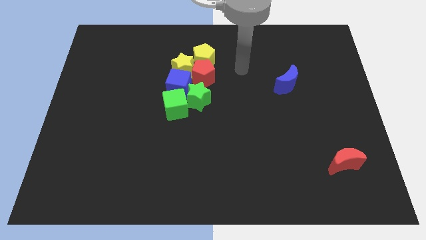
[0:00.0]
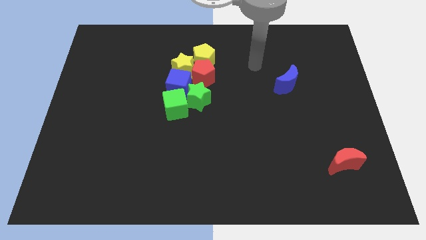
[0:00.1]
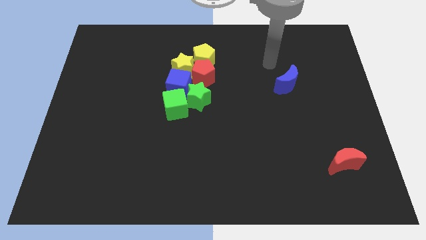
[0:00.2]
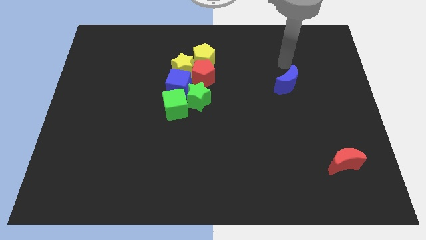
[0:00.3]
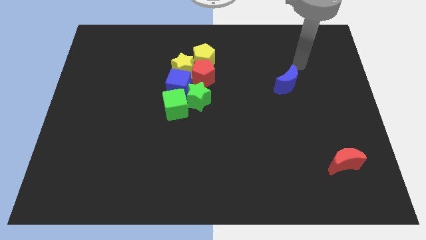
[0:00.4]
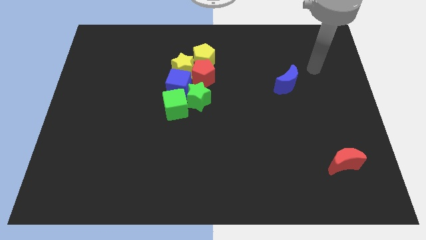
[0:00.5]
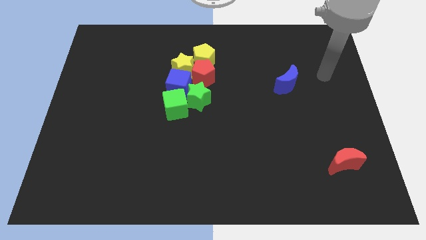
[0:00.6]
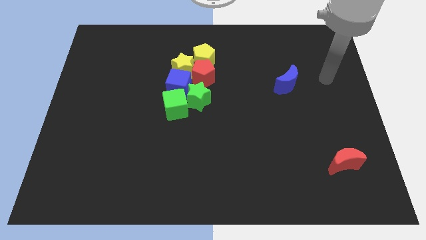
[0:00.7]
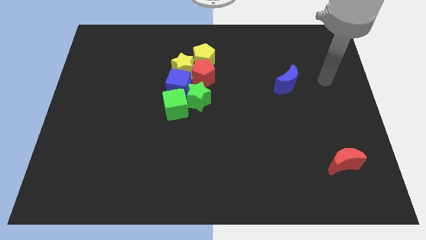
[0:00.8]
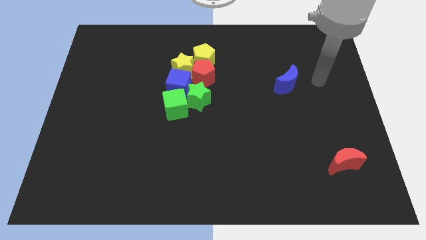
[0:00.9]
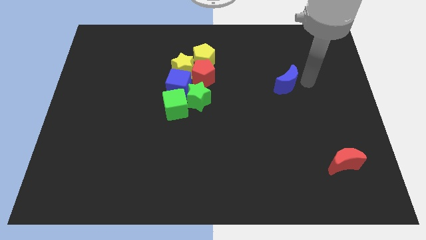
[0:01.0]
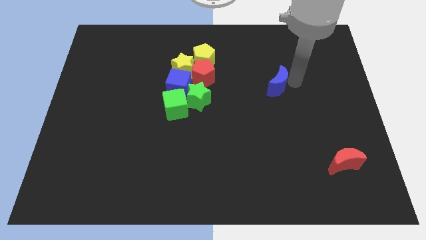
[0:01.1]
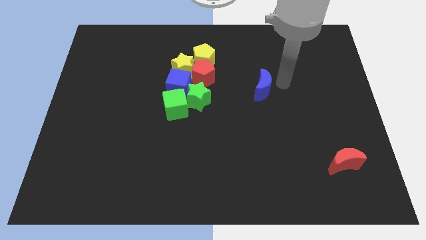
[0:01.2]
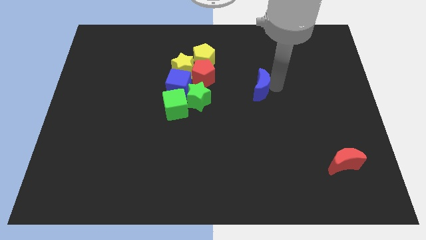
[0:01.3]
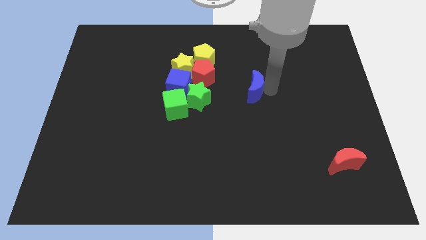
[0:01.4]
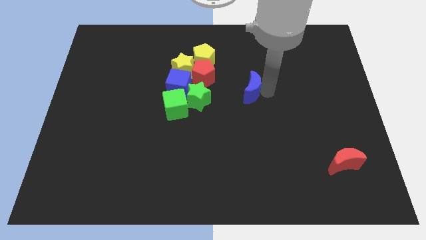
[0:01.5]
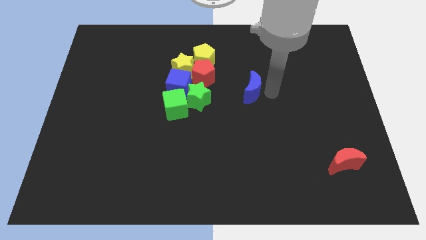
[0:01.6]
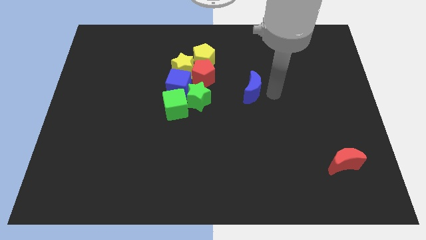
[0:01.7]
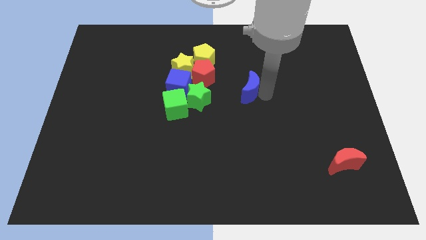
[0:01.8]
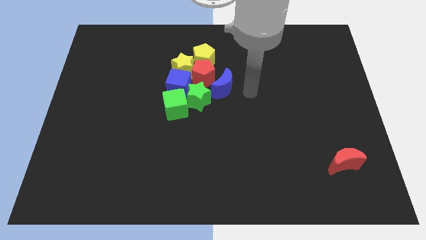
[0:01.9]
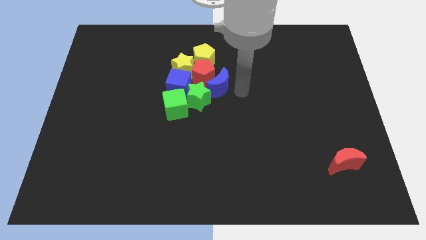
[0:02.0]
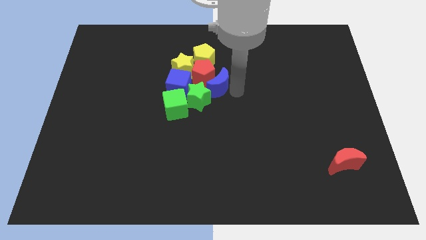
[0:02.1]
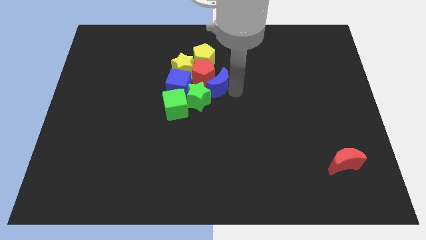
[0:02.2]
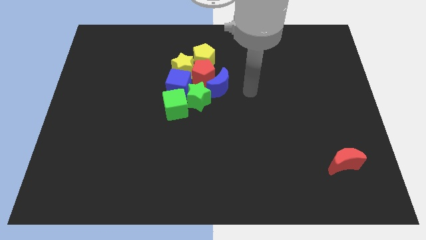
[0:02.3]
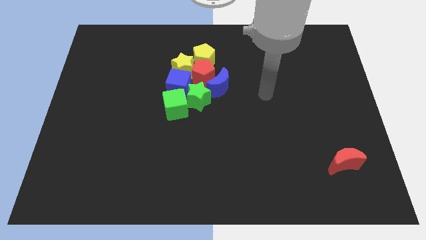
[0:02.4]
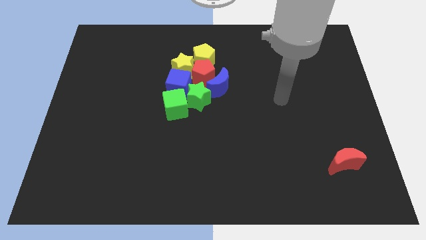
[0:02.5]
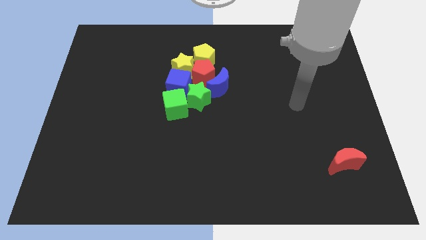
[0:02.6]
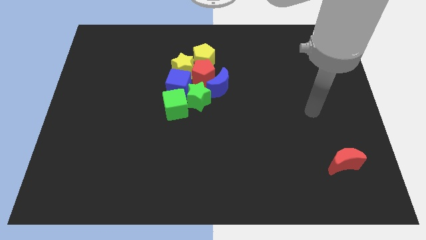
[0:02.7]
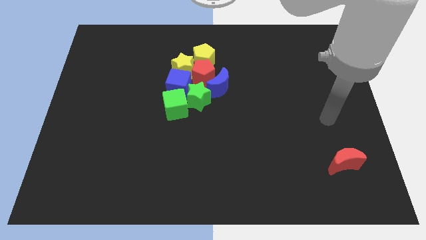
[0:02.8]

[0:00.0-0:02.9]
push the blue crescent to the top right side of the green star

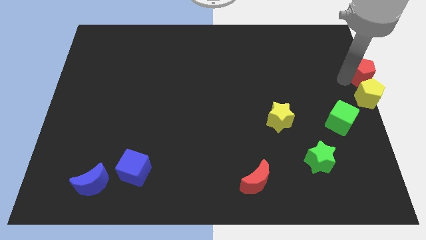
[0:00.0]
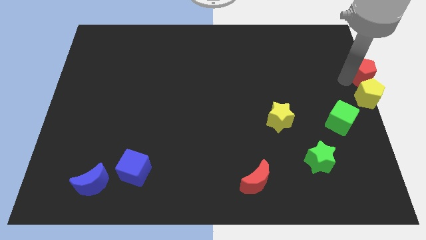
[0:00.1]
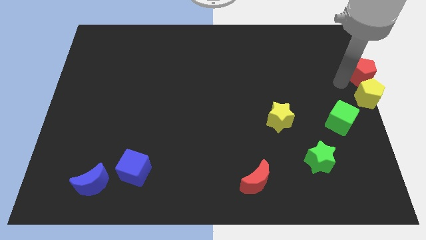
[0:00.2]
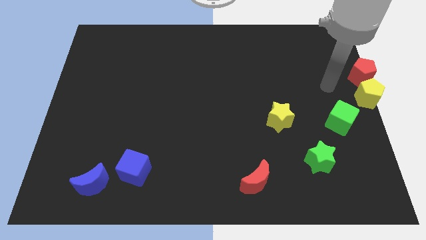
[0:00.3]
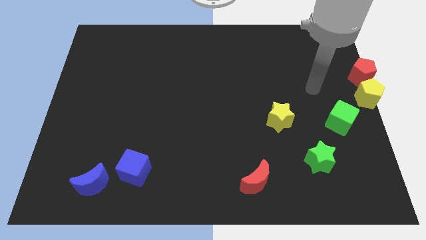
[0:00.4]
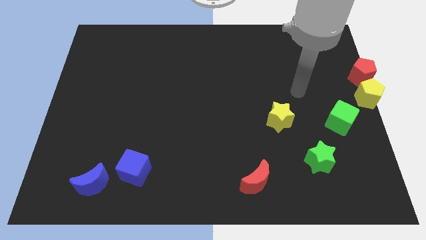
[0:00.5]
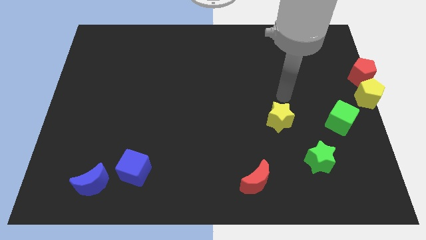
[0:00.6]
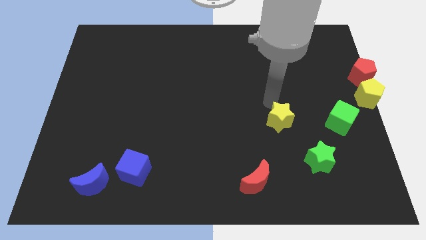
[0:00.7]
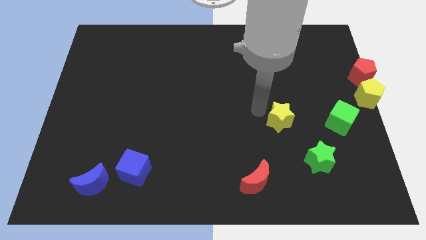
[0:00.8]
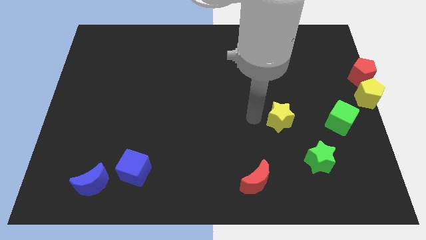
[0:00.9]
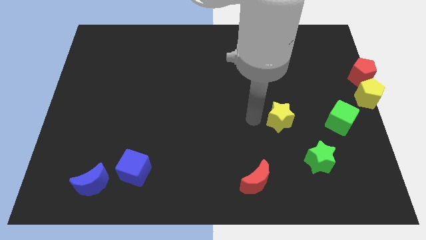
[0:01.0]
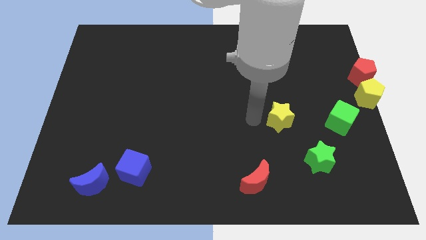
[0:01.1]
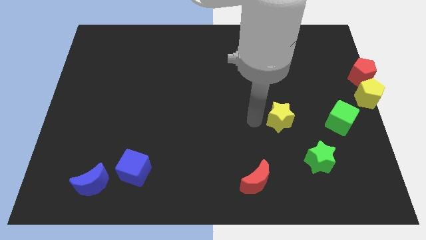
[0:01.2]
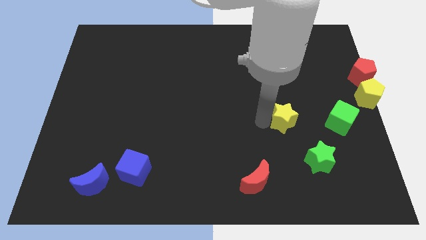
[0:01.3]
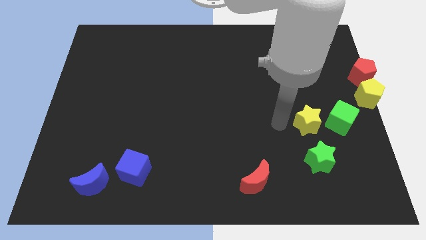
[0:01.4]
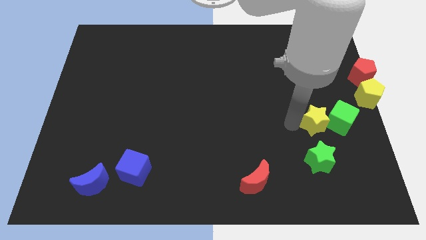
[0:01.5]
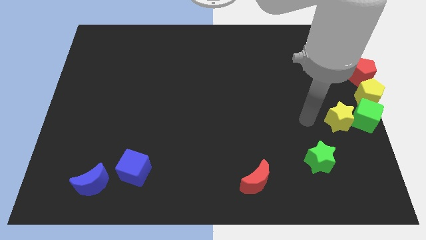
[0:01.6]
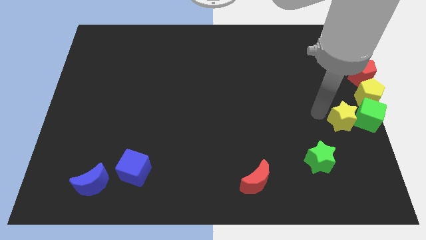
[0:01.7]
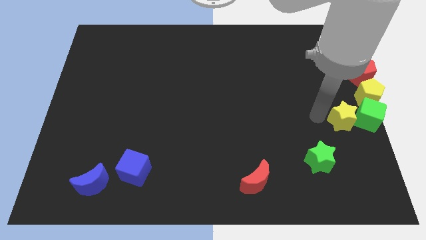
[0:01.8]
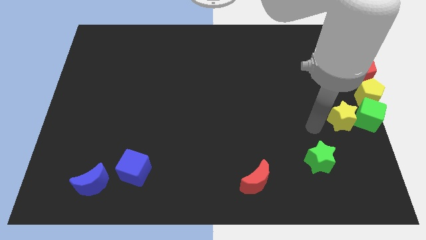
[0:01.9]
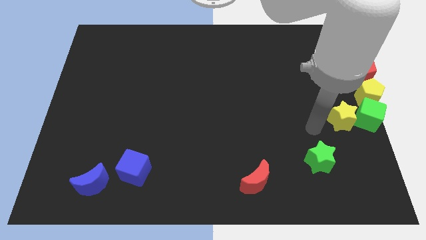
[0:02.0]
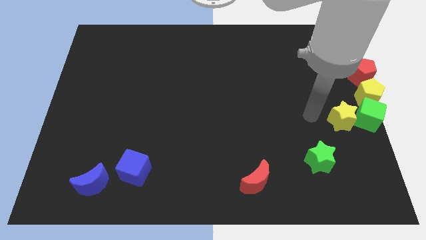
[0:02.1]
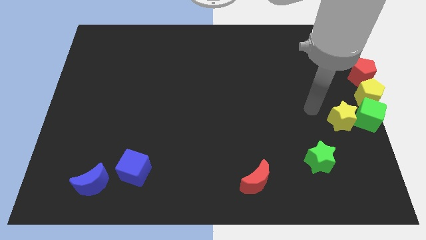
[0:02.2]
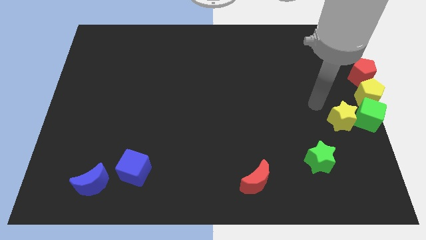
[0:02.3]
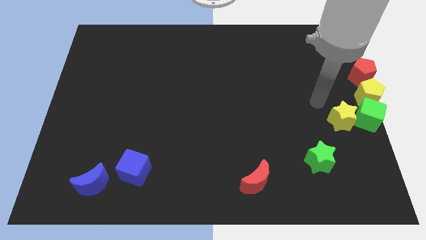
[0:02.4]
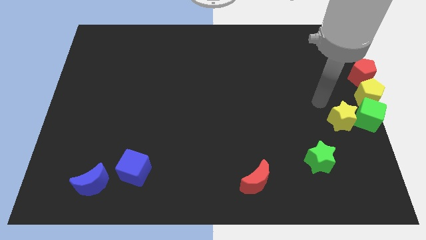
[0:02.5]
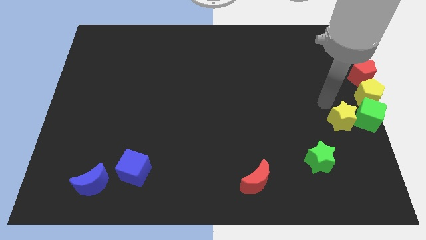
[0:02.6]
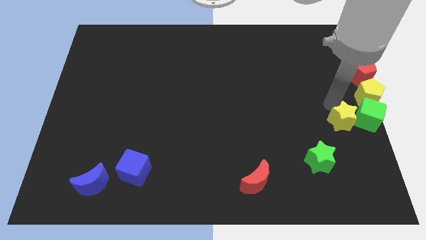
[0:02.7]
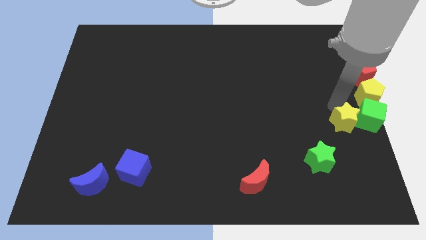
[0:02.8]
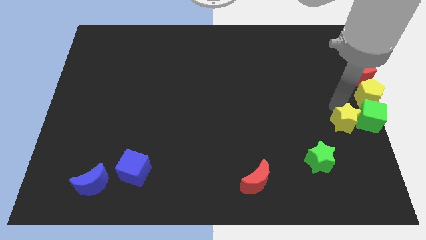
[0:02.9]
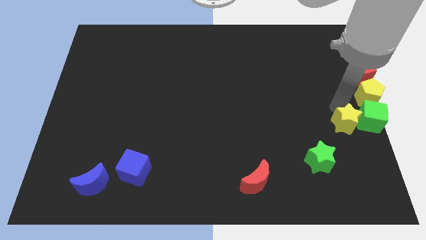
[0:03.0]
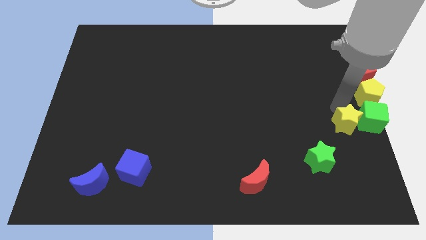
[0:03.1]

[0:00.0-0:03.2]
push yellow star along with green cube bottom of the yellow pentagon

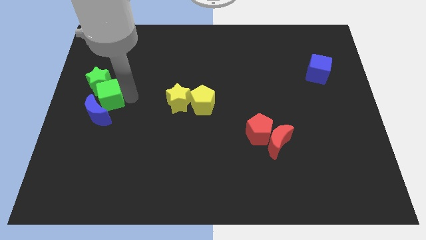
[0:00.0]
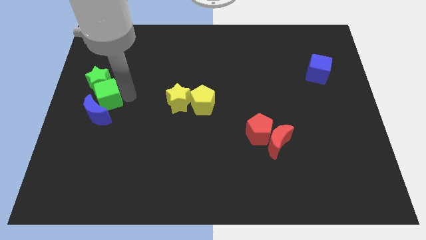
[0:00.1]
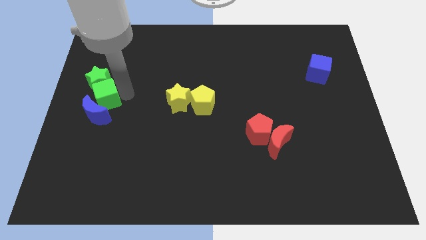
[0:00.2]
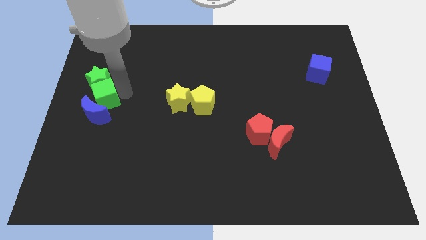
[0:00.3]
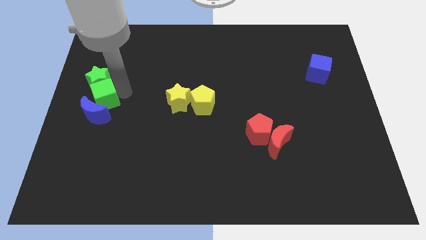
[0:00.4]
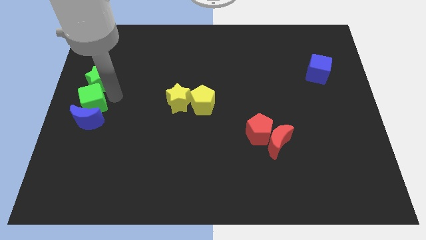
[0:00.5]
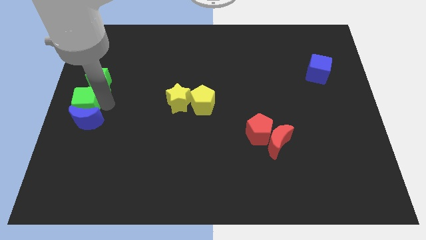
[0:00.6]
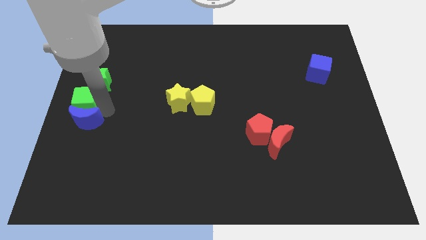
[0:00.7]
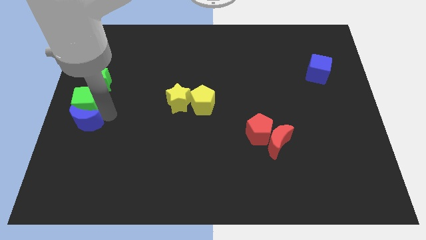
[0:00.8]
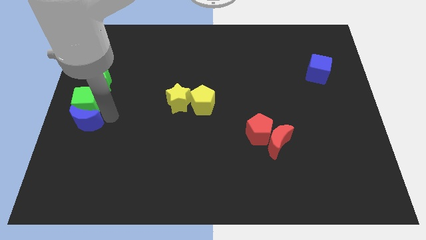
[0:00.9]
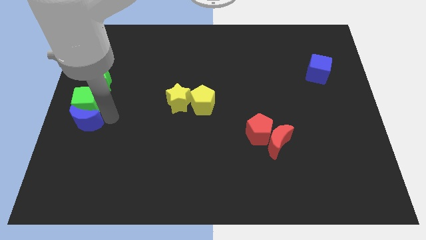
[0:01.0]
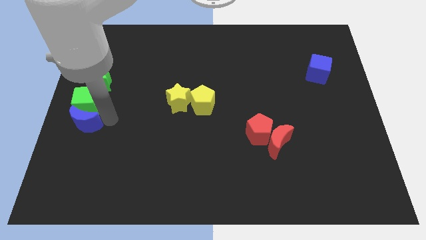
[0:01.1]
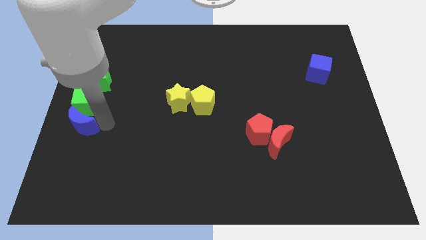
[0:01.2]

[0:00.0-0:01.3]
place the green cube in between the green star and the blue moon

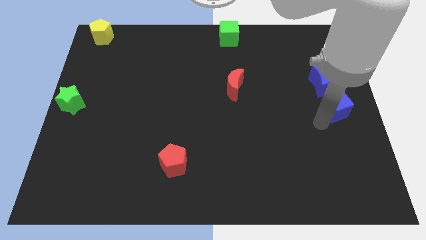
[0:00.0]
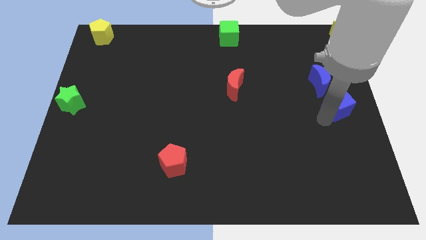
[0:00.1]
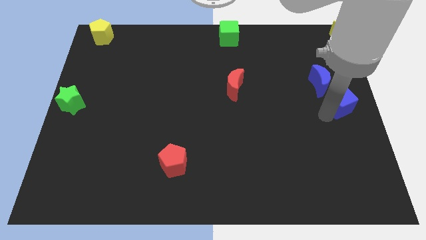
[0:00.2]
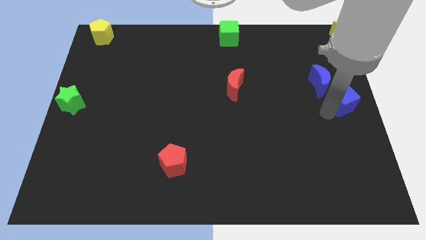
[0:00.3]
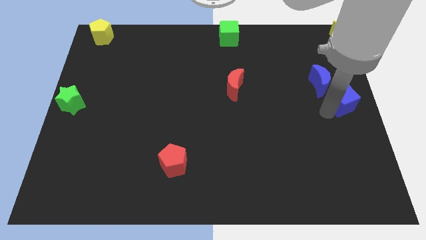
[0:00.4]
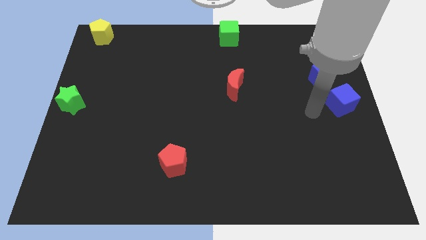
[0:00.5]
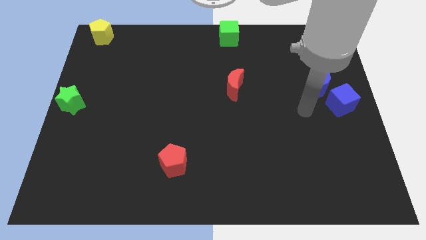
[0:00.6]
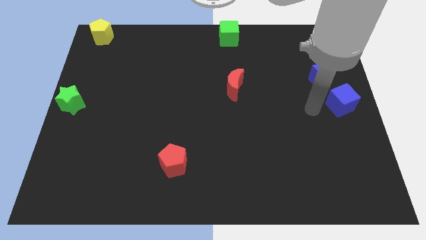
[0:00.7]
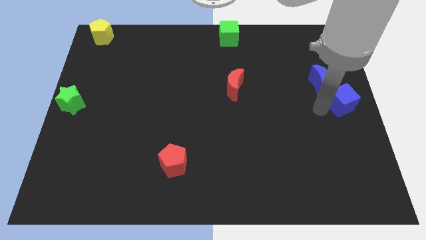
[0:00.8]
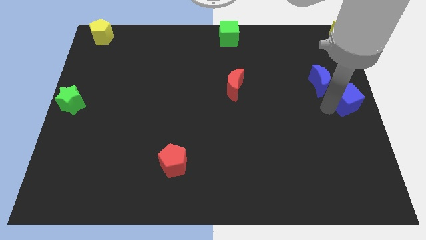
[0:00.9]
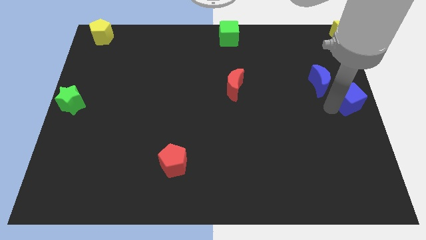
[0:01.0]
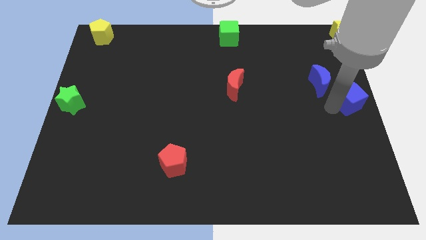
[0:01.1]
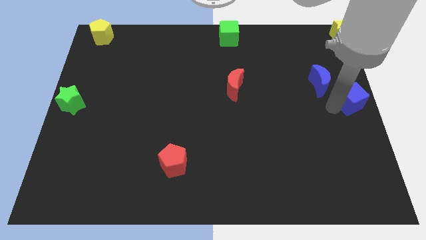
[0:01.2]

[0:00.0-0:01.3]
push the blue cube to the right center of the board

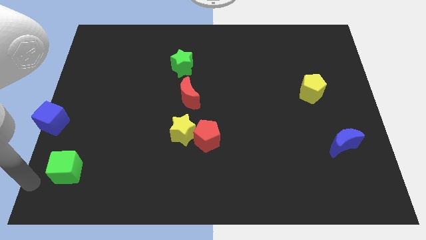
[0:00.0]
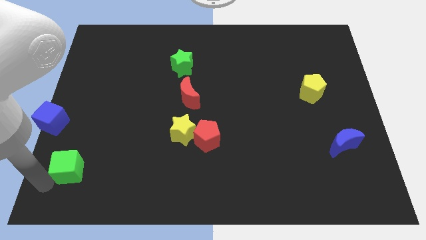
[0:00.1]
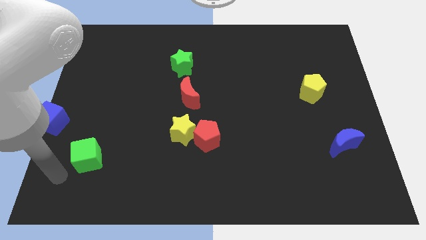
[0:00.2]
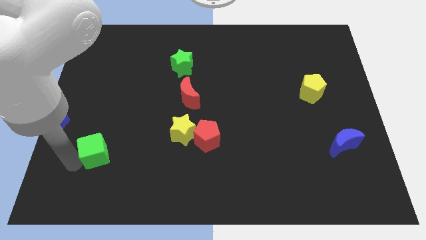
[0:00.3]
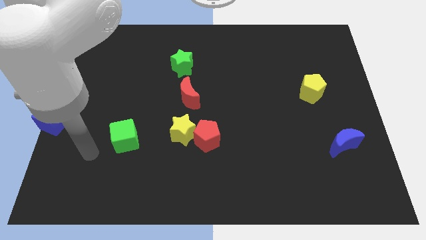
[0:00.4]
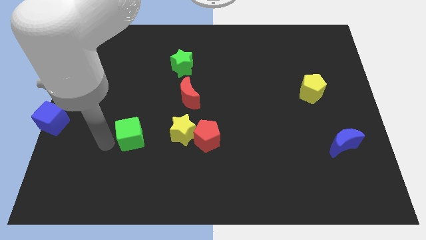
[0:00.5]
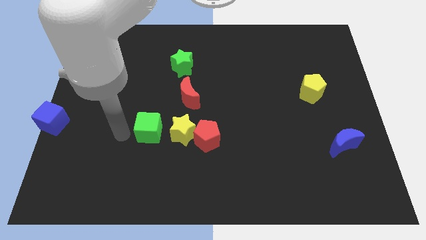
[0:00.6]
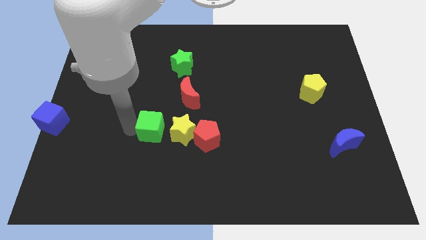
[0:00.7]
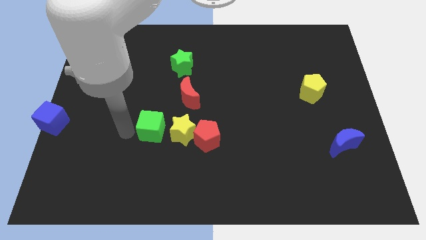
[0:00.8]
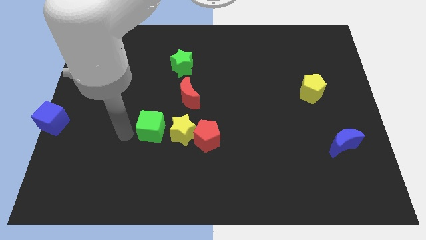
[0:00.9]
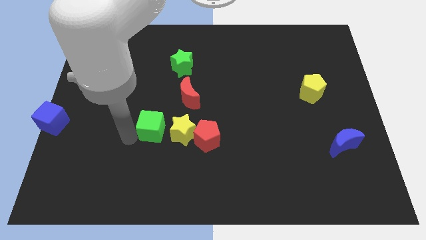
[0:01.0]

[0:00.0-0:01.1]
move green cube towards yellow star
